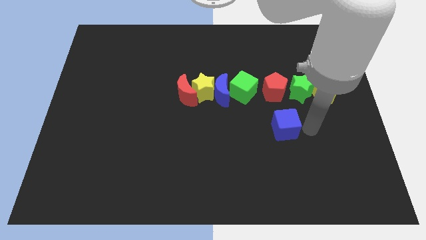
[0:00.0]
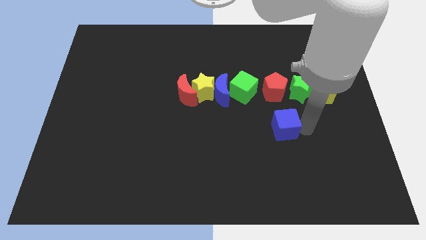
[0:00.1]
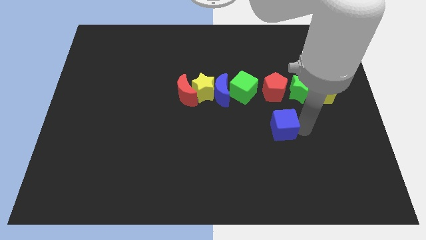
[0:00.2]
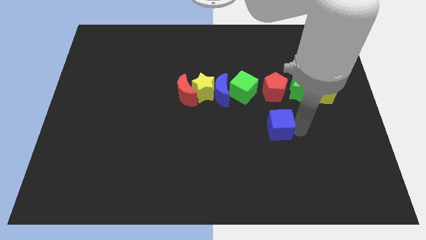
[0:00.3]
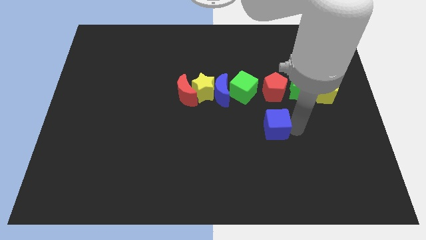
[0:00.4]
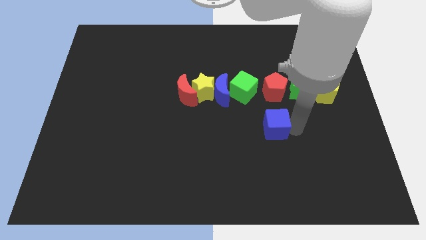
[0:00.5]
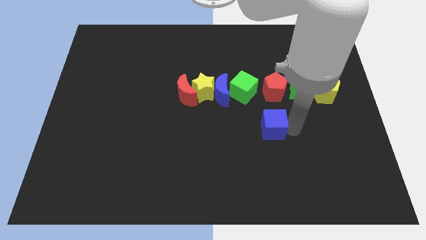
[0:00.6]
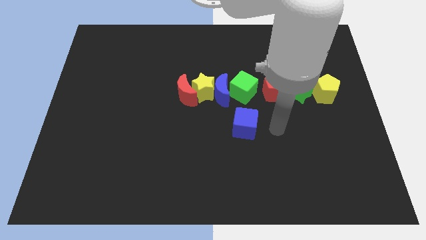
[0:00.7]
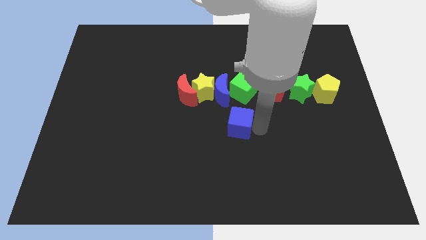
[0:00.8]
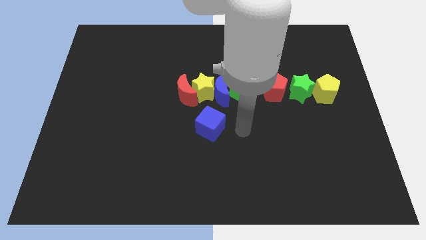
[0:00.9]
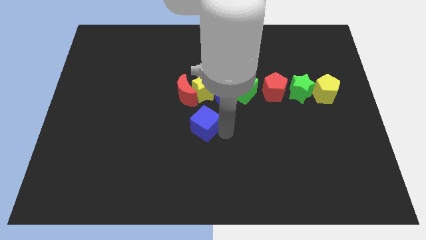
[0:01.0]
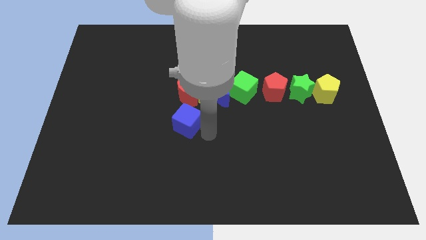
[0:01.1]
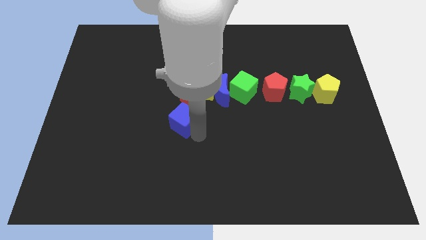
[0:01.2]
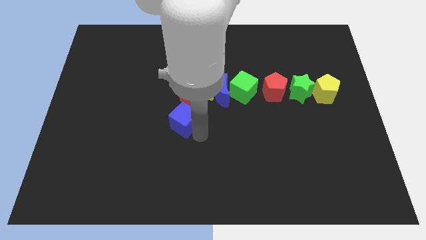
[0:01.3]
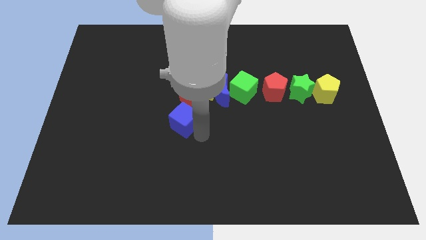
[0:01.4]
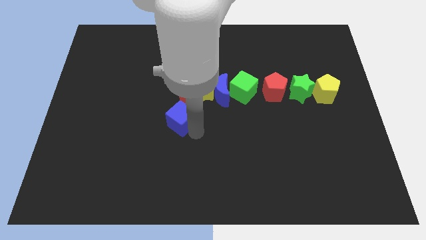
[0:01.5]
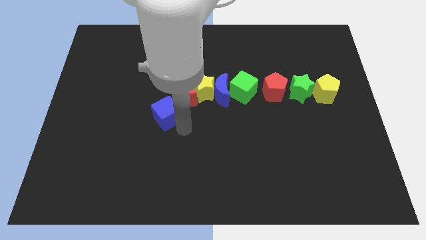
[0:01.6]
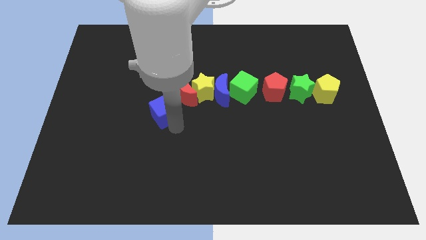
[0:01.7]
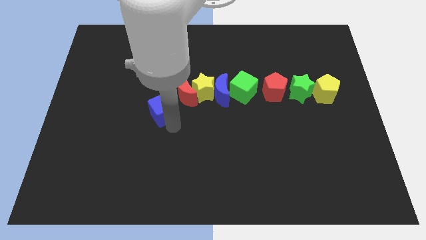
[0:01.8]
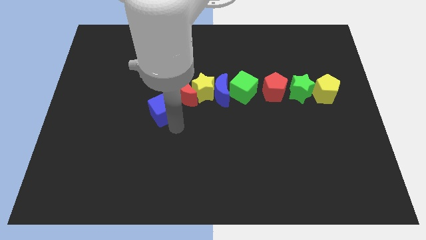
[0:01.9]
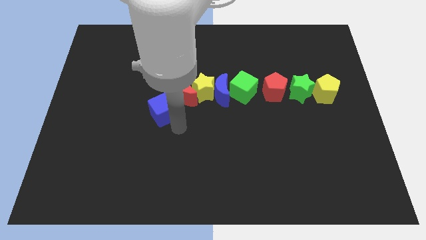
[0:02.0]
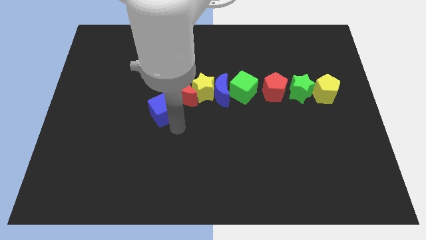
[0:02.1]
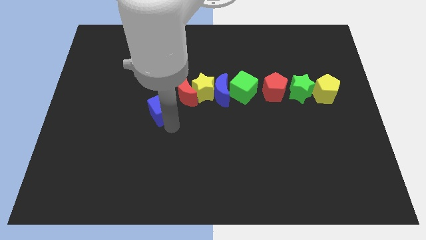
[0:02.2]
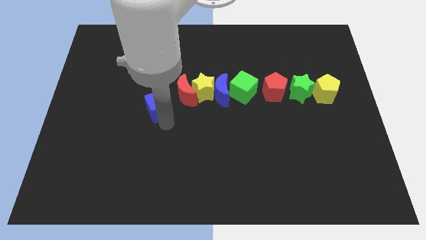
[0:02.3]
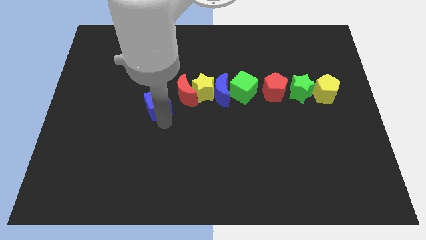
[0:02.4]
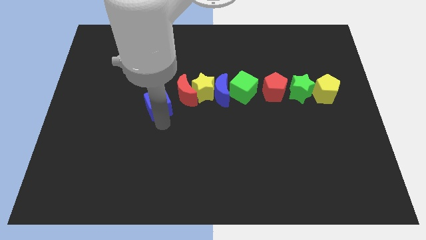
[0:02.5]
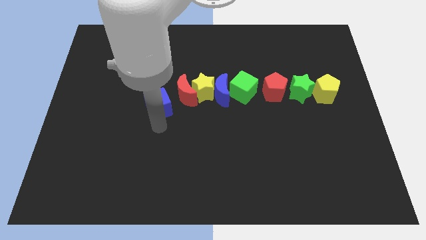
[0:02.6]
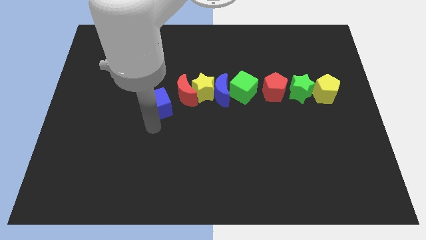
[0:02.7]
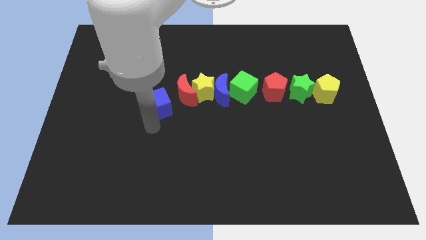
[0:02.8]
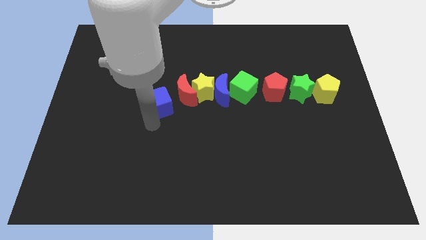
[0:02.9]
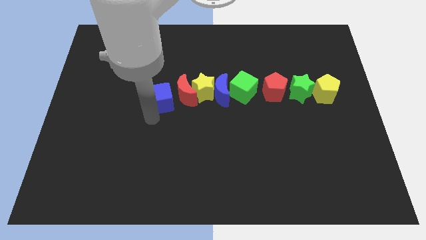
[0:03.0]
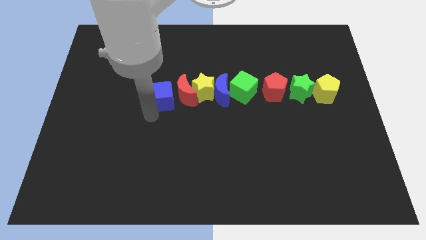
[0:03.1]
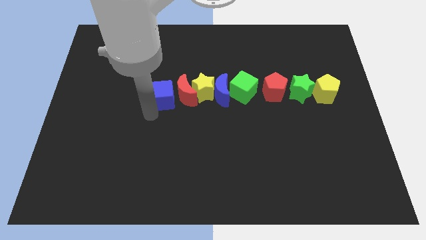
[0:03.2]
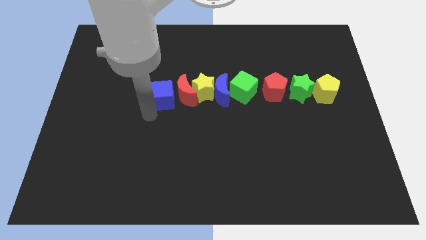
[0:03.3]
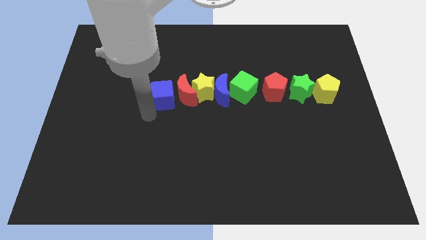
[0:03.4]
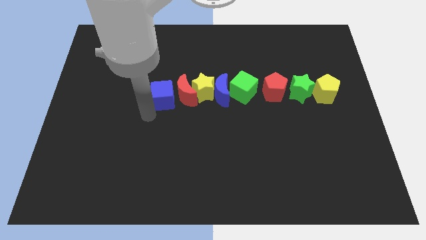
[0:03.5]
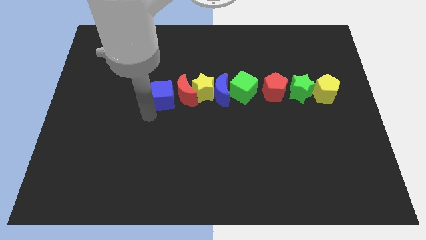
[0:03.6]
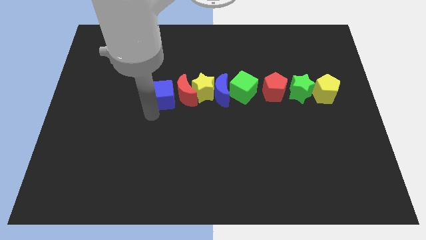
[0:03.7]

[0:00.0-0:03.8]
move the blue cube left to the red crescent

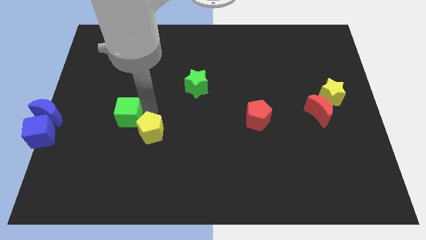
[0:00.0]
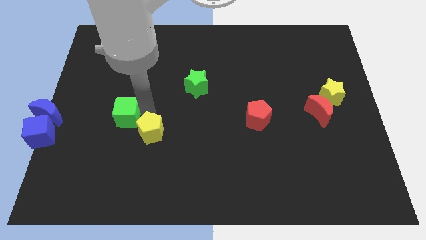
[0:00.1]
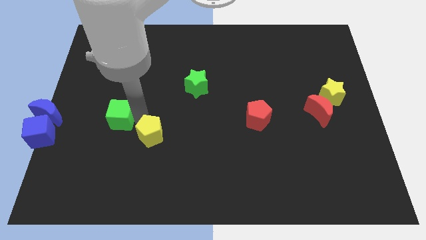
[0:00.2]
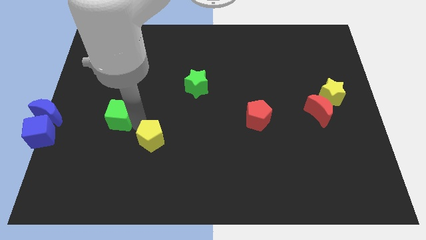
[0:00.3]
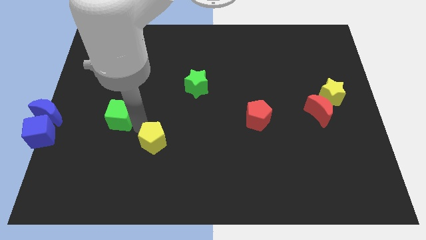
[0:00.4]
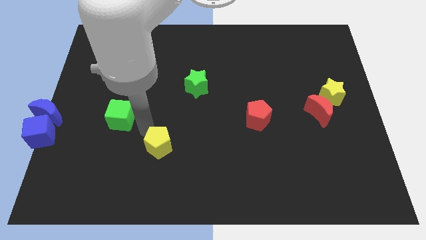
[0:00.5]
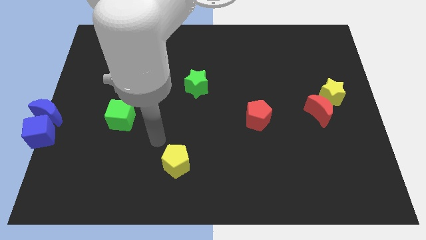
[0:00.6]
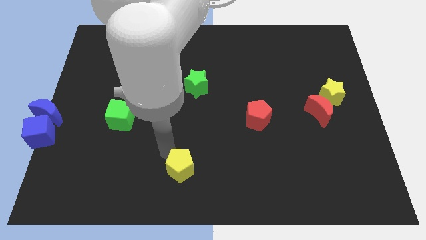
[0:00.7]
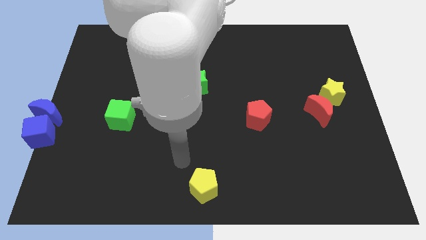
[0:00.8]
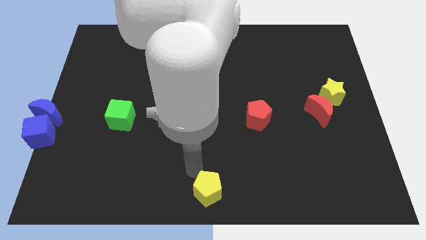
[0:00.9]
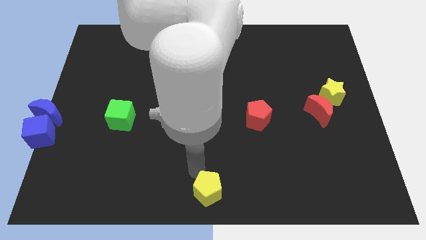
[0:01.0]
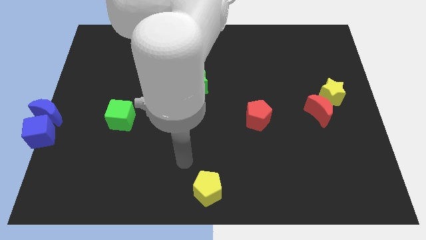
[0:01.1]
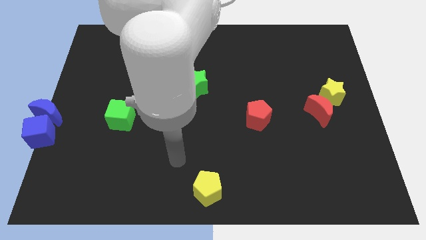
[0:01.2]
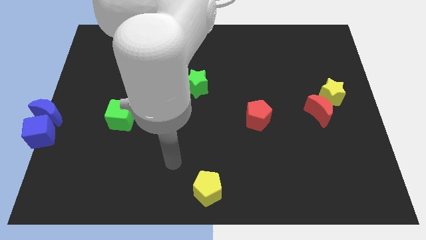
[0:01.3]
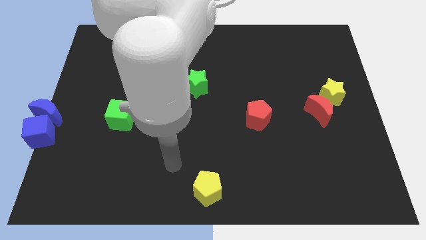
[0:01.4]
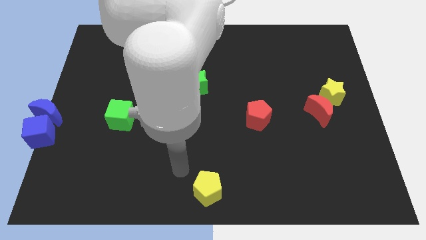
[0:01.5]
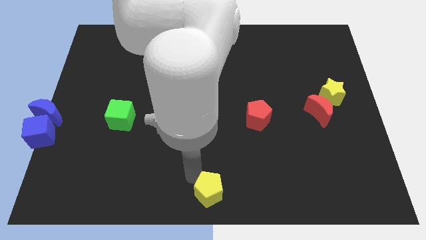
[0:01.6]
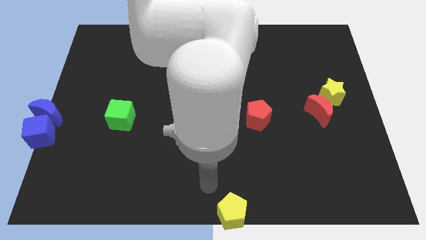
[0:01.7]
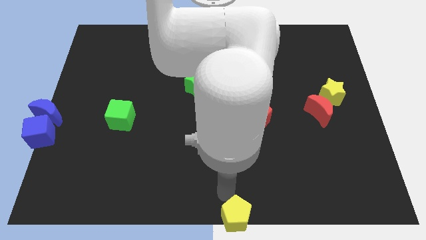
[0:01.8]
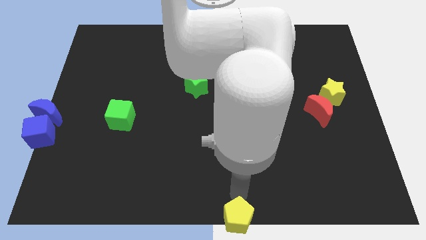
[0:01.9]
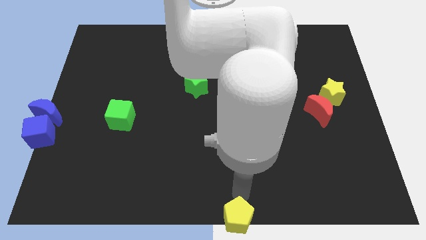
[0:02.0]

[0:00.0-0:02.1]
place yellow pentagon to the bottom center

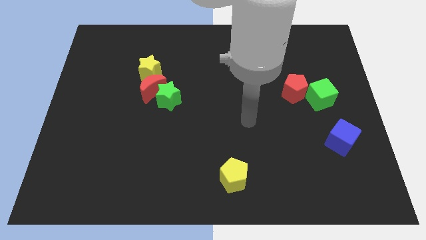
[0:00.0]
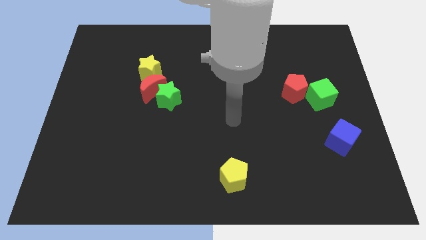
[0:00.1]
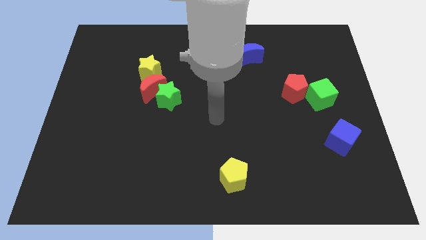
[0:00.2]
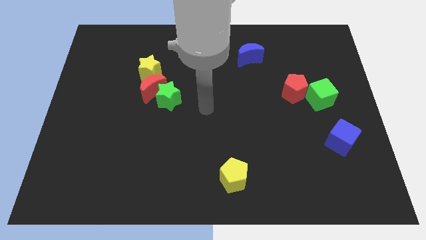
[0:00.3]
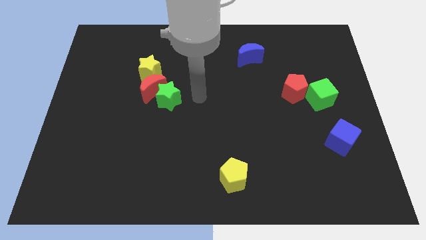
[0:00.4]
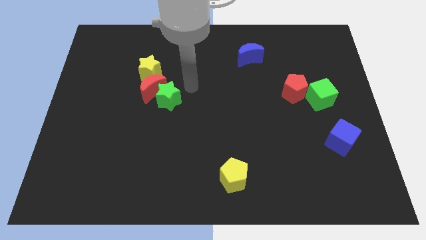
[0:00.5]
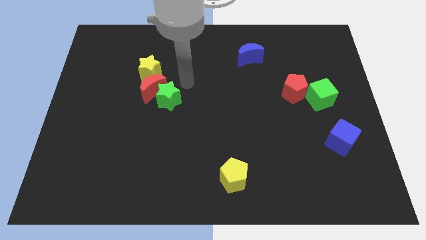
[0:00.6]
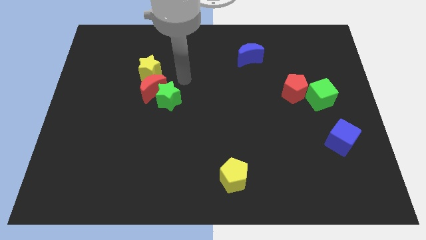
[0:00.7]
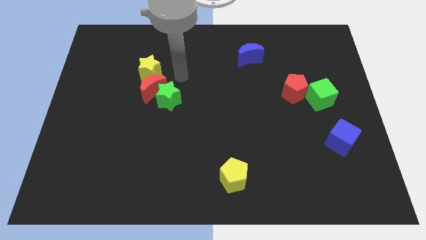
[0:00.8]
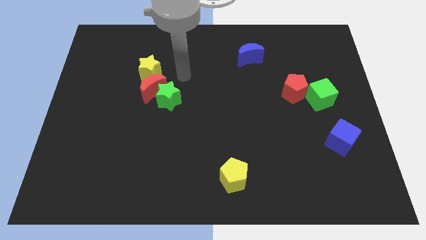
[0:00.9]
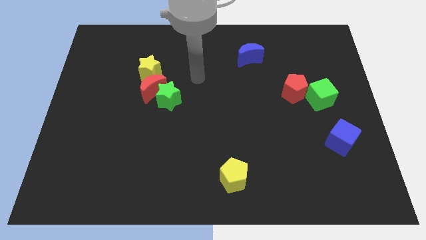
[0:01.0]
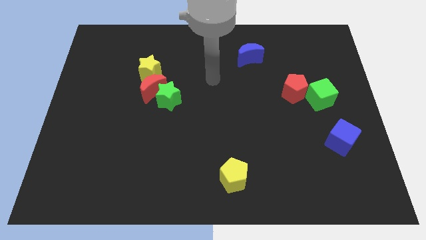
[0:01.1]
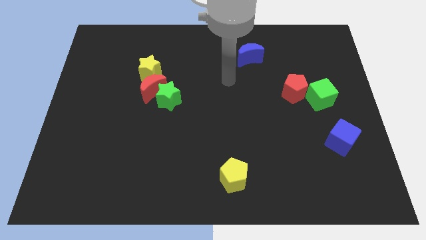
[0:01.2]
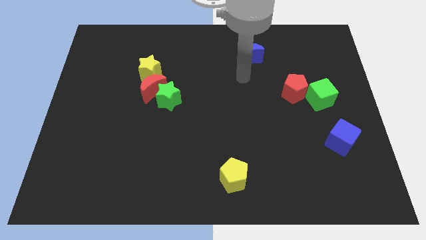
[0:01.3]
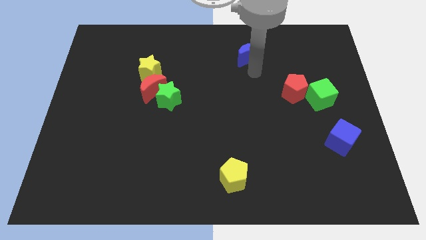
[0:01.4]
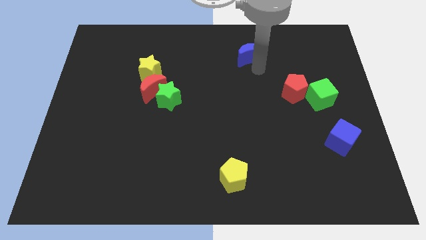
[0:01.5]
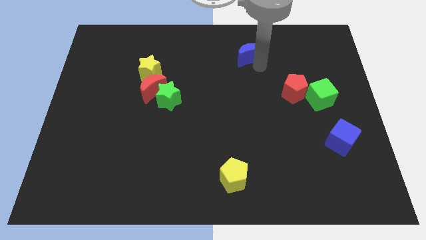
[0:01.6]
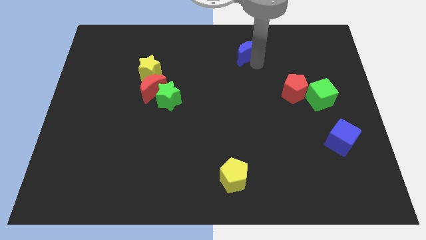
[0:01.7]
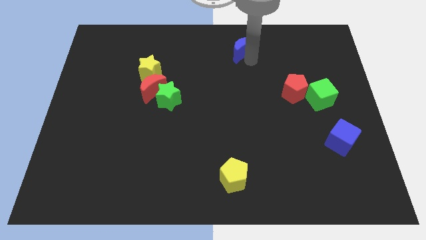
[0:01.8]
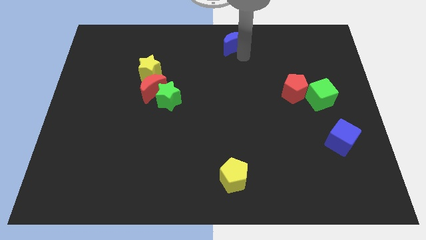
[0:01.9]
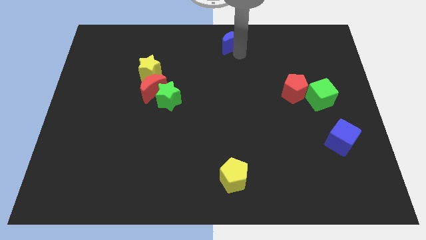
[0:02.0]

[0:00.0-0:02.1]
move the blue moon slightly up

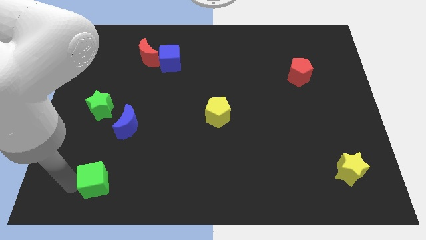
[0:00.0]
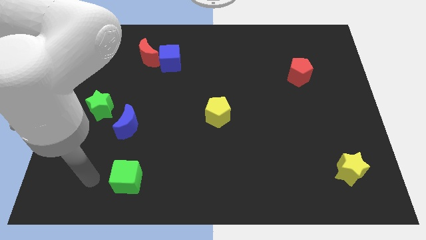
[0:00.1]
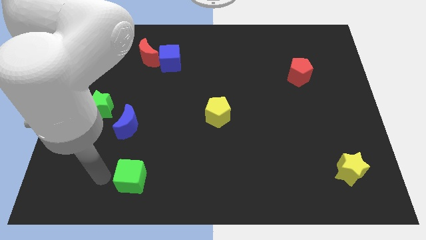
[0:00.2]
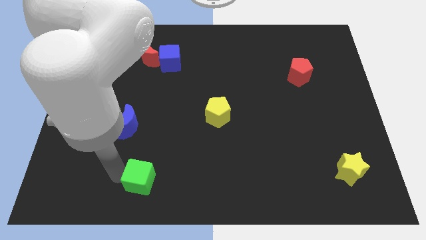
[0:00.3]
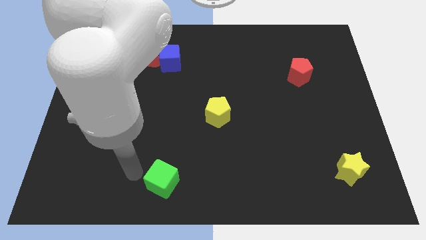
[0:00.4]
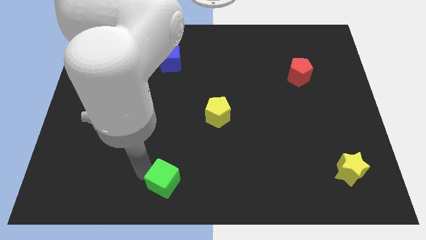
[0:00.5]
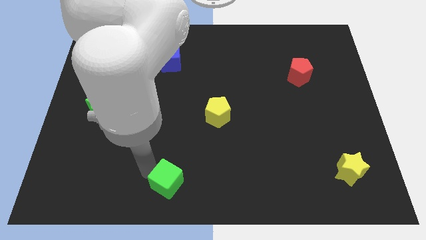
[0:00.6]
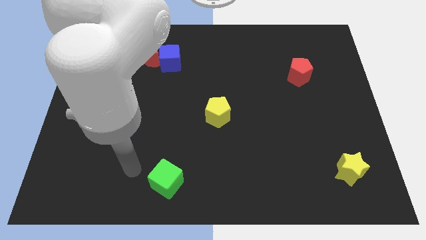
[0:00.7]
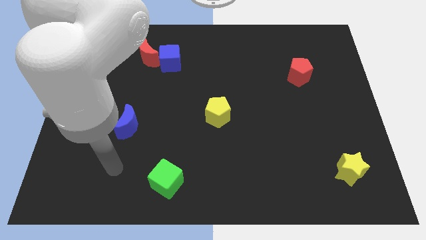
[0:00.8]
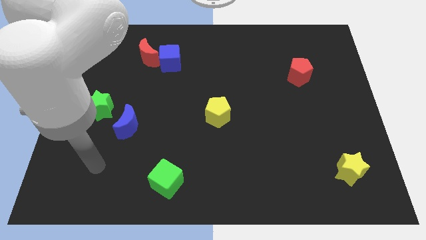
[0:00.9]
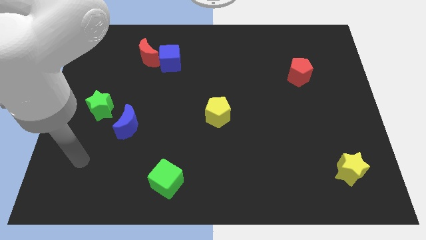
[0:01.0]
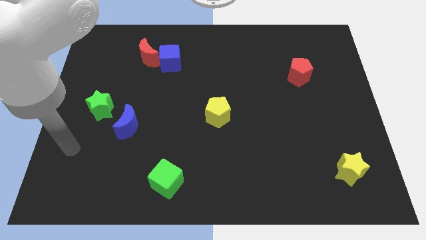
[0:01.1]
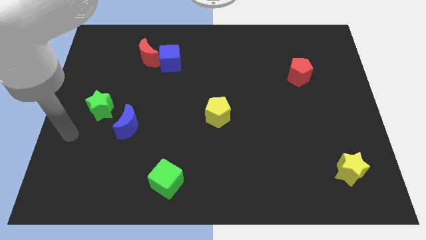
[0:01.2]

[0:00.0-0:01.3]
place the green cube diagonally to the blue moon
